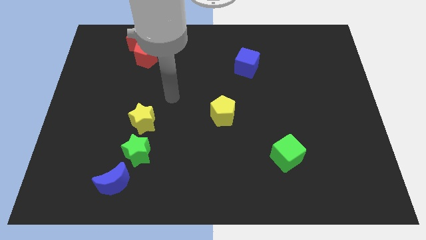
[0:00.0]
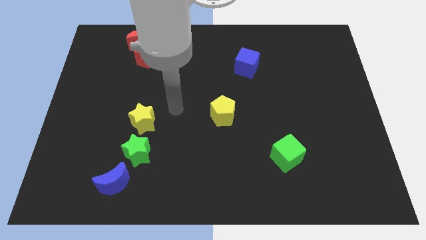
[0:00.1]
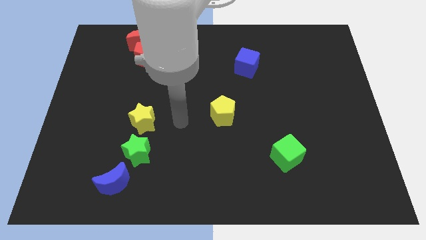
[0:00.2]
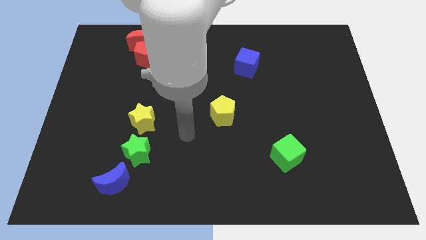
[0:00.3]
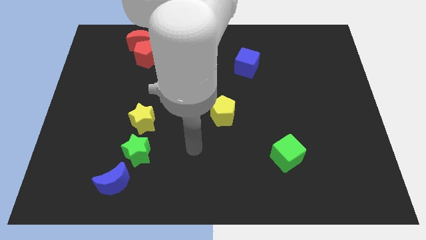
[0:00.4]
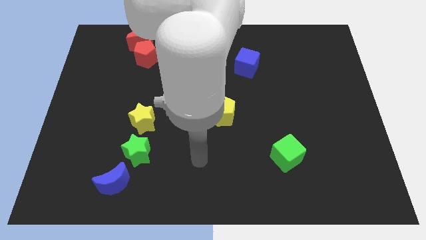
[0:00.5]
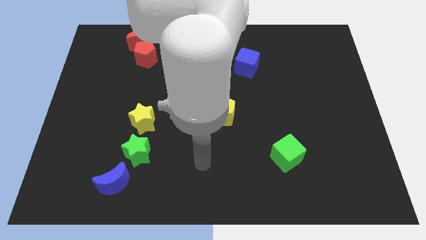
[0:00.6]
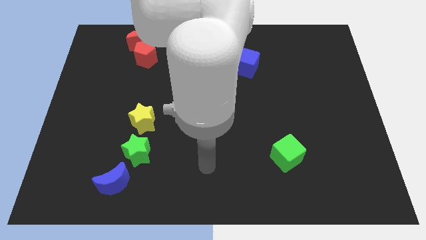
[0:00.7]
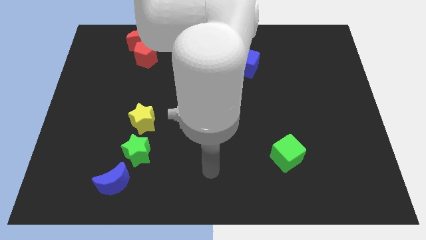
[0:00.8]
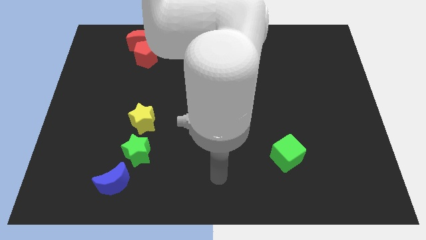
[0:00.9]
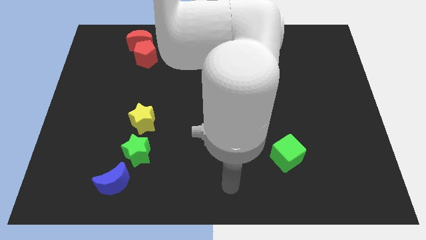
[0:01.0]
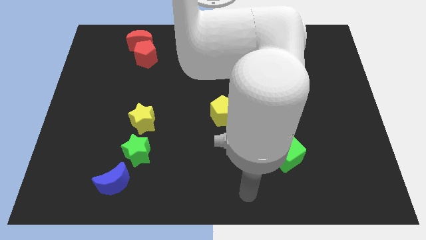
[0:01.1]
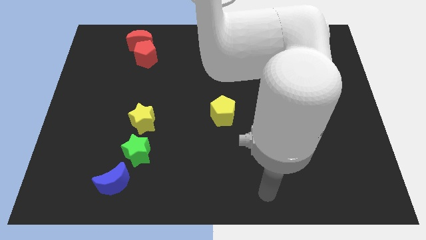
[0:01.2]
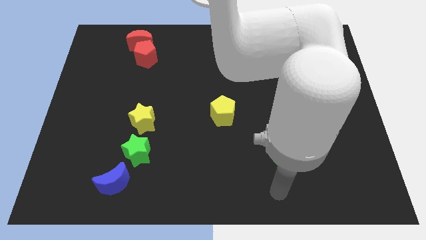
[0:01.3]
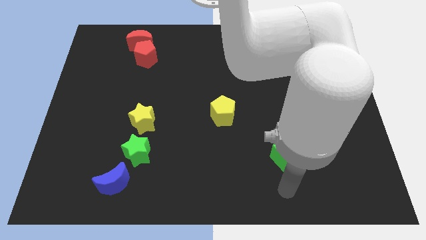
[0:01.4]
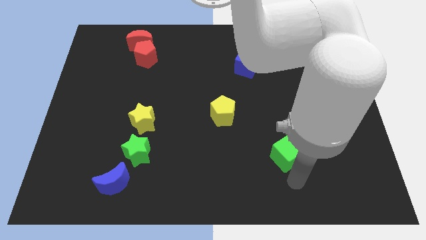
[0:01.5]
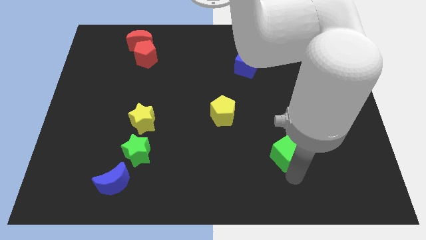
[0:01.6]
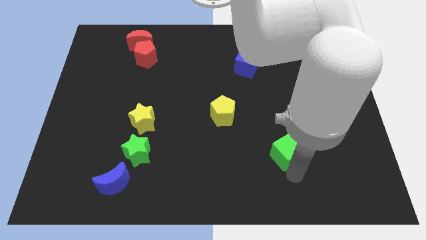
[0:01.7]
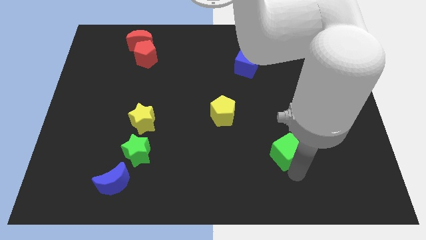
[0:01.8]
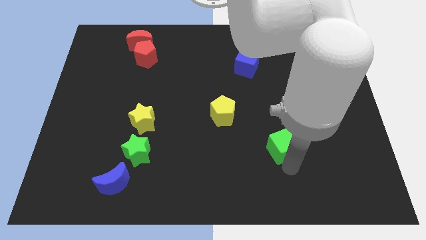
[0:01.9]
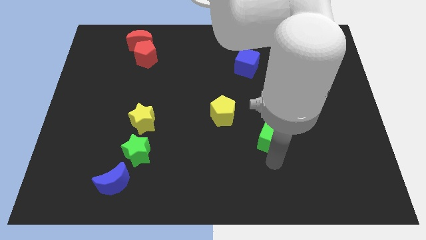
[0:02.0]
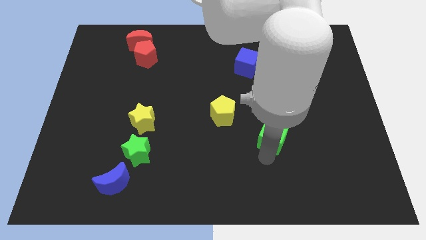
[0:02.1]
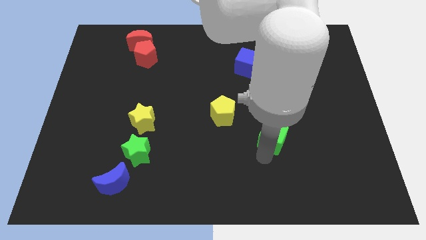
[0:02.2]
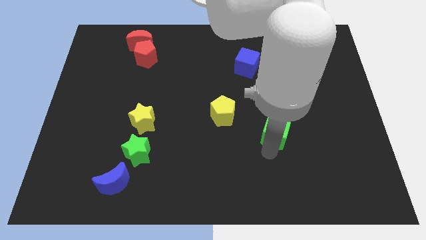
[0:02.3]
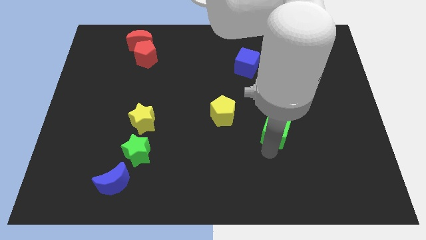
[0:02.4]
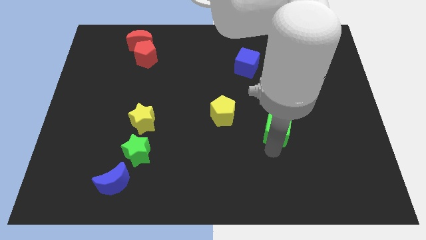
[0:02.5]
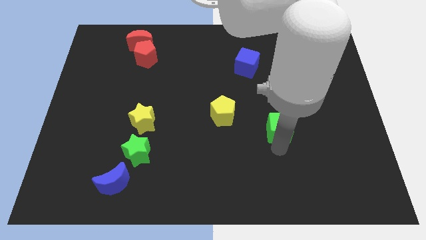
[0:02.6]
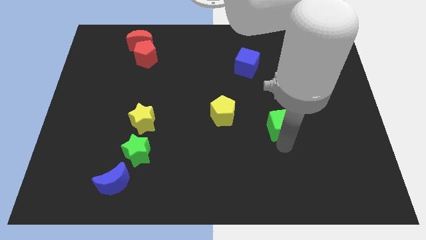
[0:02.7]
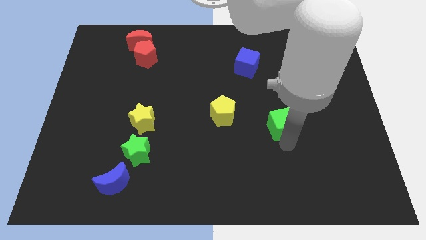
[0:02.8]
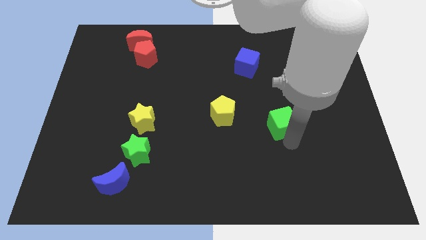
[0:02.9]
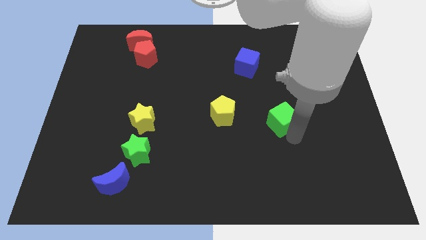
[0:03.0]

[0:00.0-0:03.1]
push the green cube to the right of the yellow pentagon

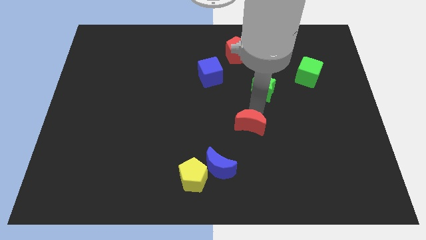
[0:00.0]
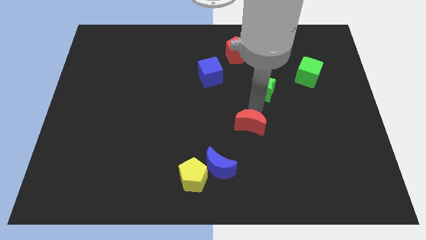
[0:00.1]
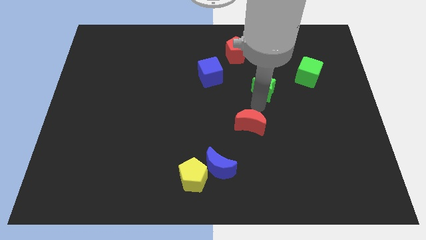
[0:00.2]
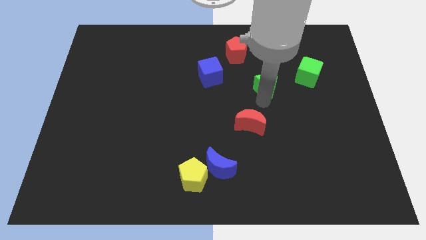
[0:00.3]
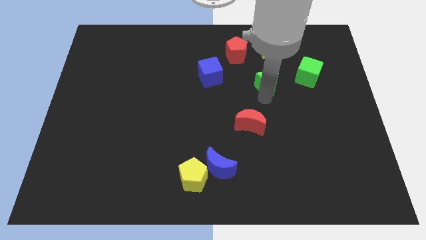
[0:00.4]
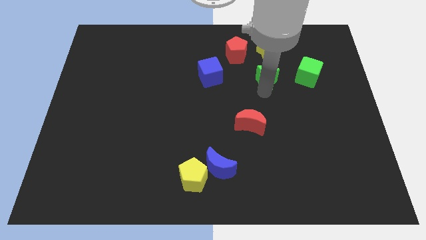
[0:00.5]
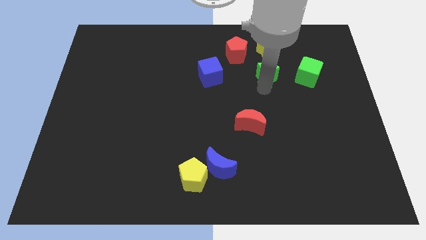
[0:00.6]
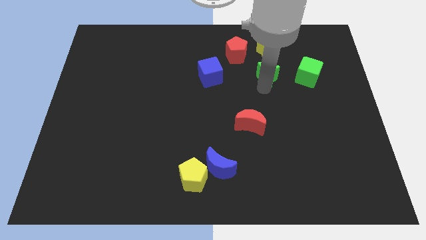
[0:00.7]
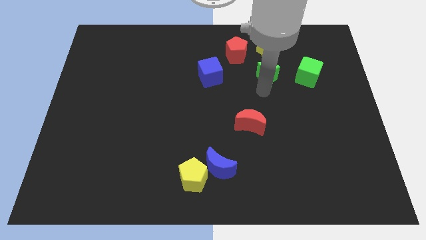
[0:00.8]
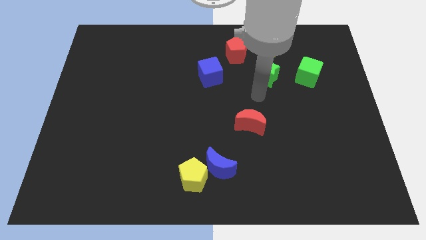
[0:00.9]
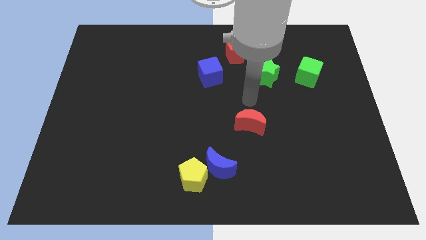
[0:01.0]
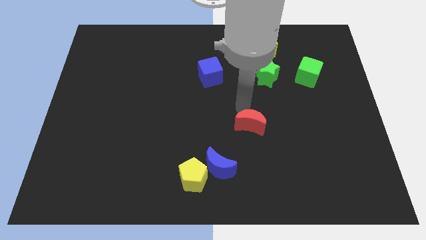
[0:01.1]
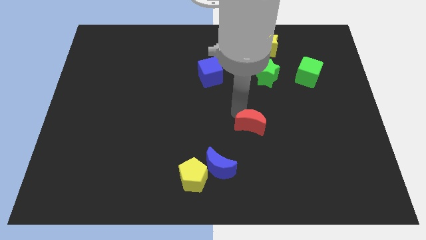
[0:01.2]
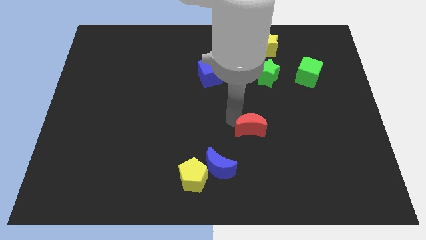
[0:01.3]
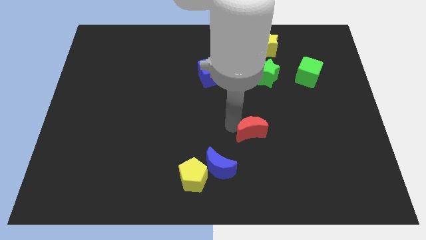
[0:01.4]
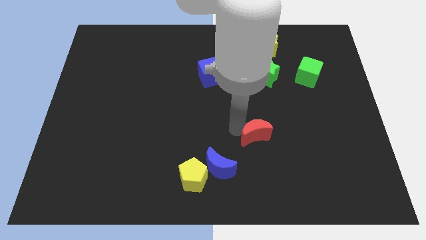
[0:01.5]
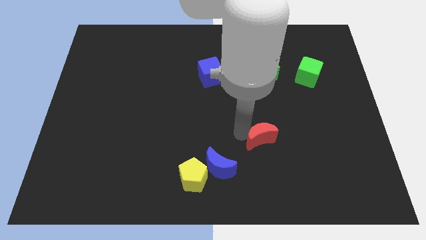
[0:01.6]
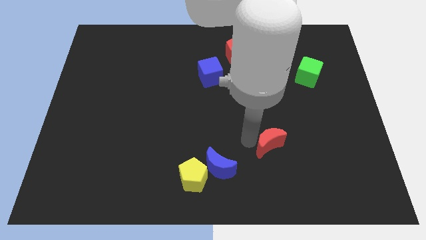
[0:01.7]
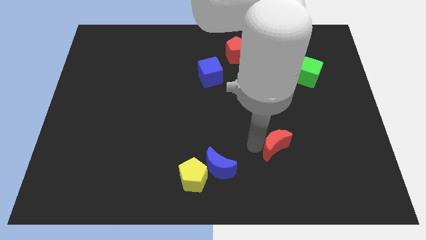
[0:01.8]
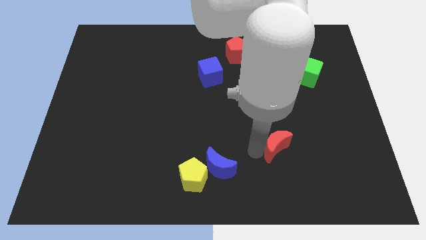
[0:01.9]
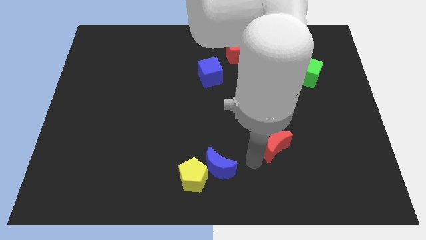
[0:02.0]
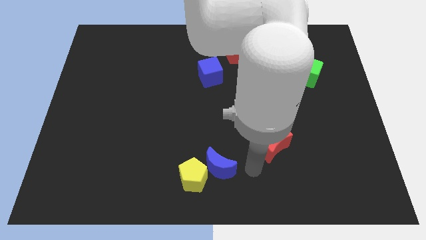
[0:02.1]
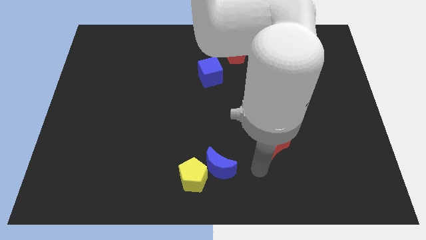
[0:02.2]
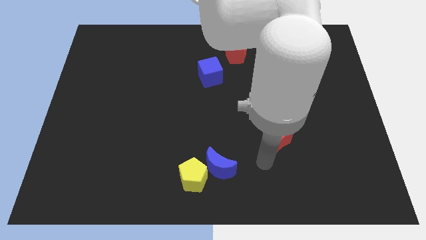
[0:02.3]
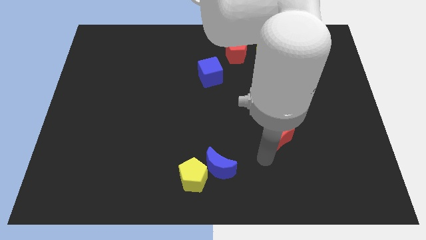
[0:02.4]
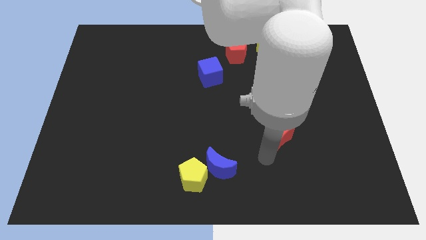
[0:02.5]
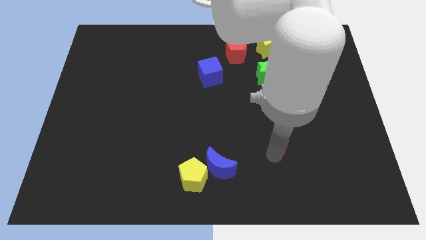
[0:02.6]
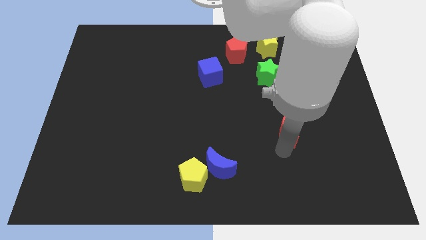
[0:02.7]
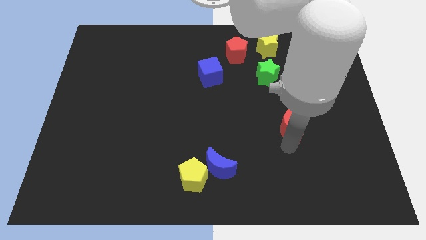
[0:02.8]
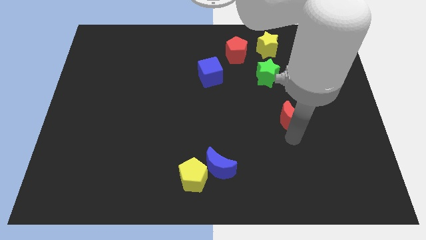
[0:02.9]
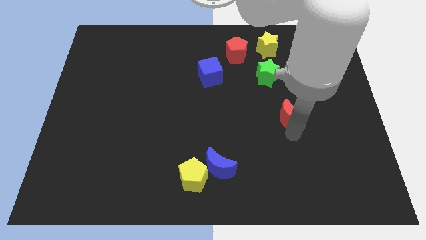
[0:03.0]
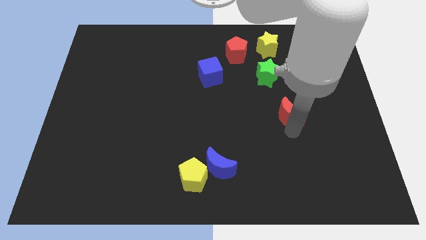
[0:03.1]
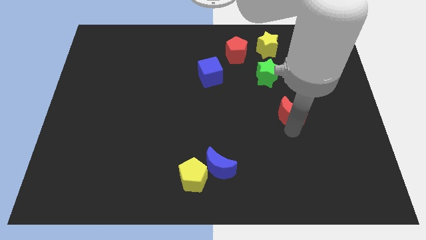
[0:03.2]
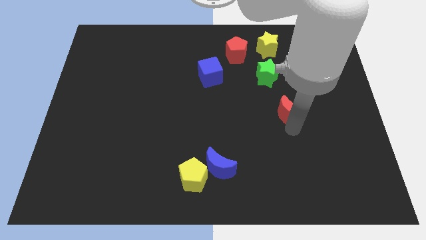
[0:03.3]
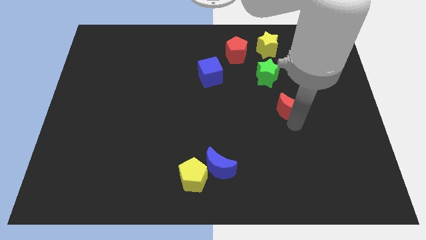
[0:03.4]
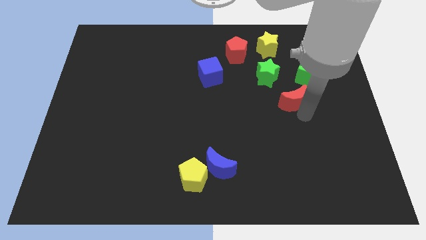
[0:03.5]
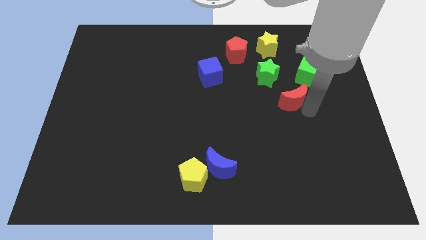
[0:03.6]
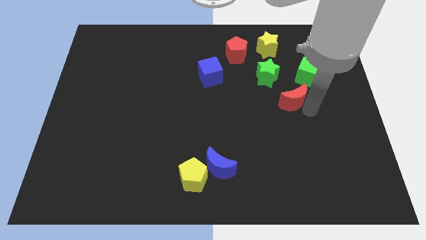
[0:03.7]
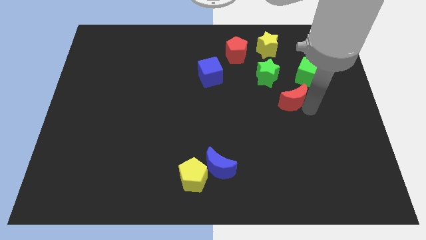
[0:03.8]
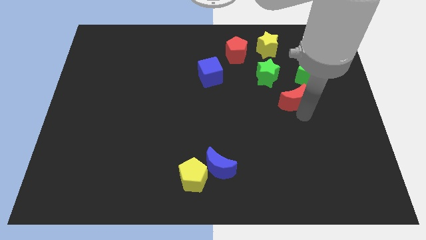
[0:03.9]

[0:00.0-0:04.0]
place the red moon diagonally below right to the green star

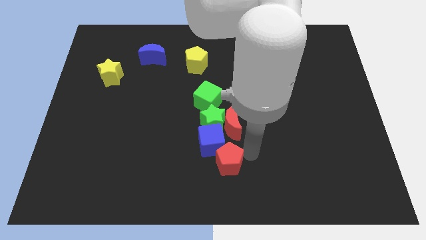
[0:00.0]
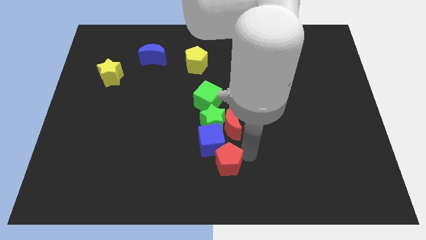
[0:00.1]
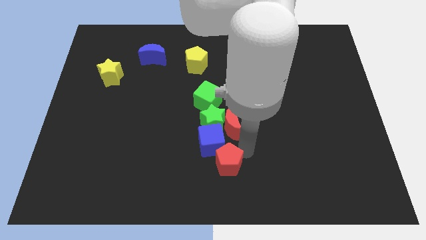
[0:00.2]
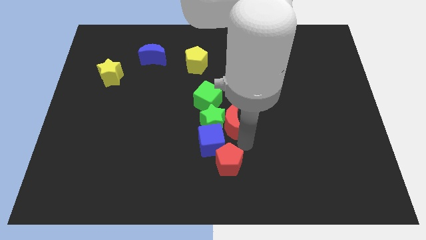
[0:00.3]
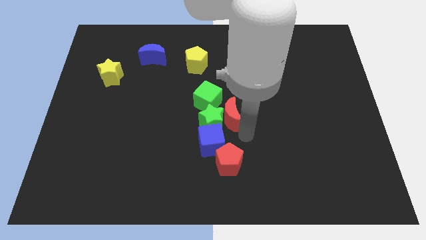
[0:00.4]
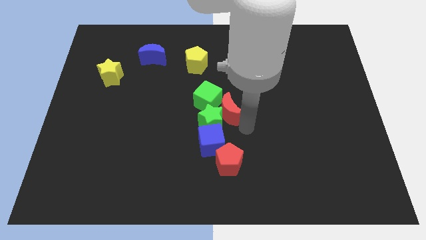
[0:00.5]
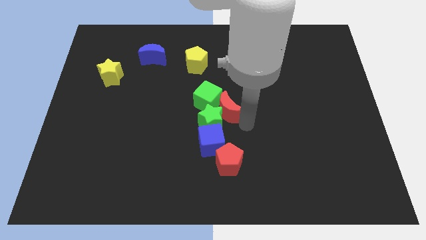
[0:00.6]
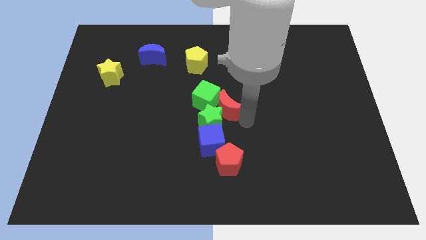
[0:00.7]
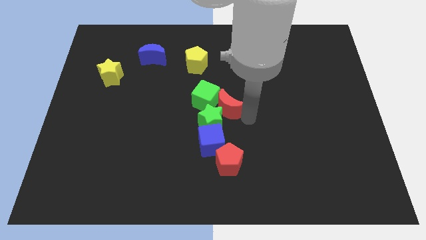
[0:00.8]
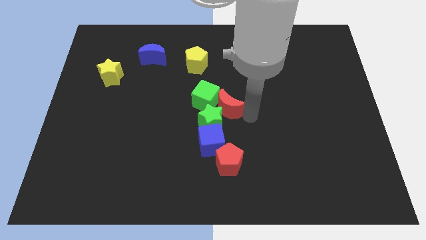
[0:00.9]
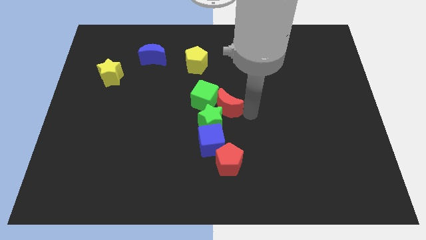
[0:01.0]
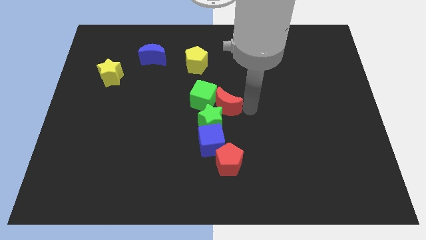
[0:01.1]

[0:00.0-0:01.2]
move red moon right beside the green cube

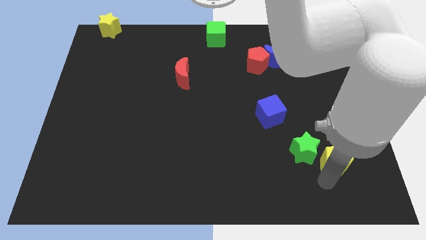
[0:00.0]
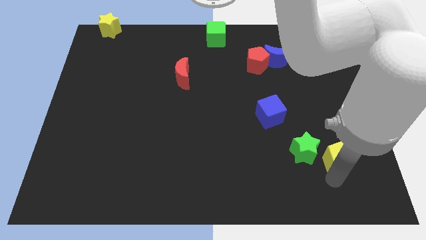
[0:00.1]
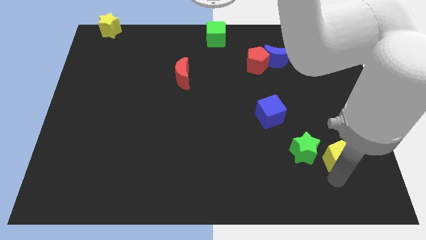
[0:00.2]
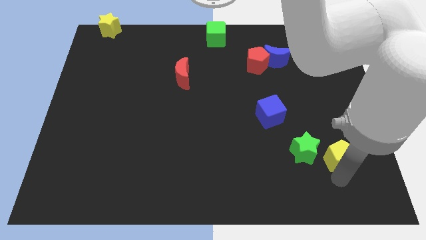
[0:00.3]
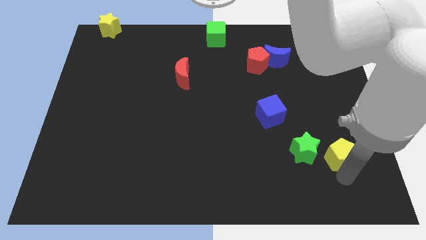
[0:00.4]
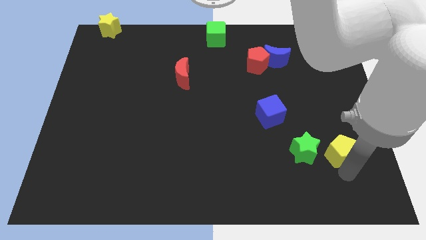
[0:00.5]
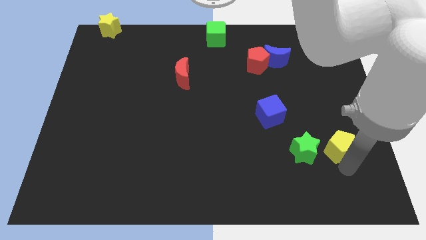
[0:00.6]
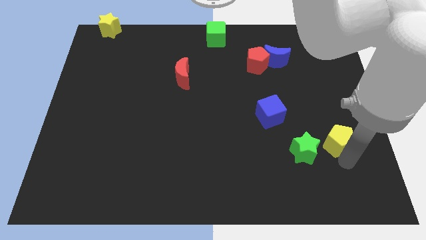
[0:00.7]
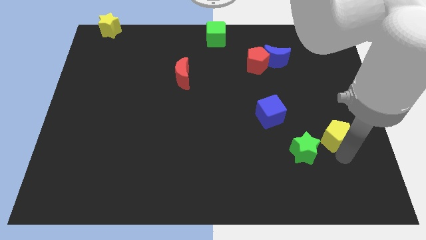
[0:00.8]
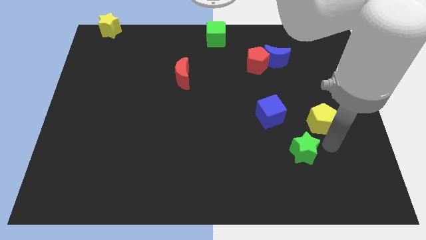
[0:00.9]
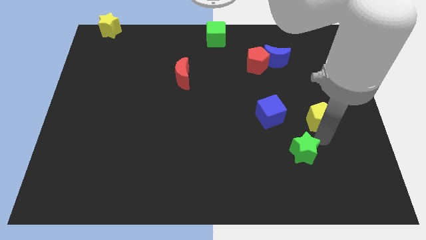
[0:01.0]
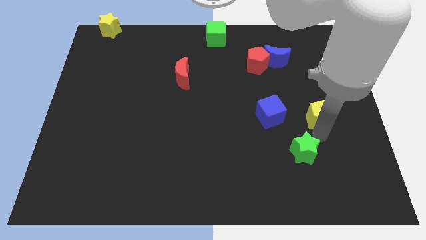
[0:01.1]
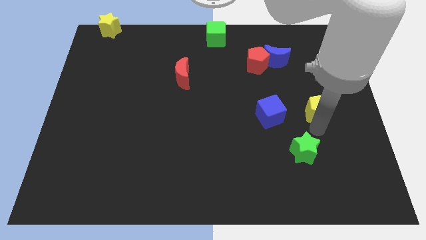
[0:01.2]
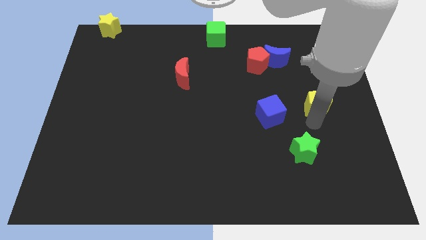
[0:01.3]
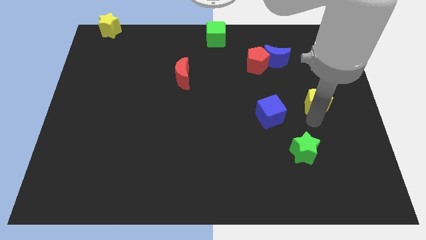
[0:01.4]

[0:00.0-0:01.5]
place the yellow pentagon to the right of the blue cube
